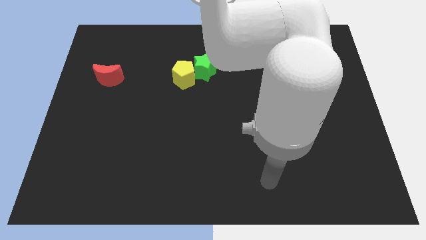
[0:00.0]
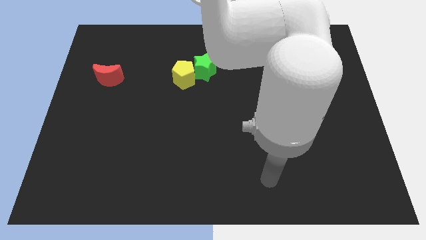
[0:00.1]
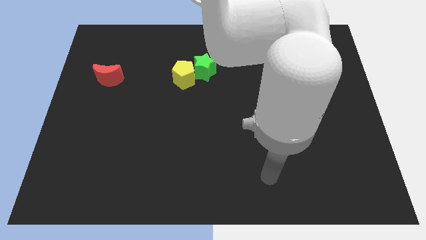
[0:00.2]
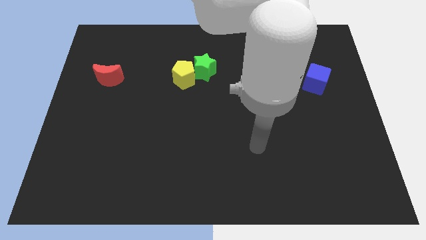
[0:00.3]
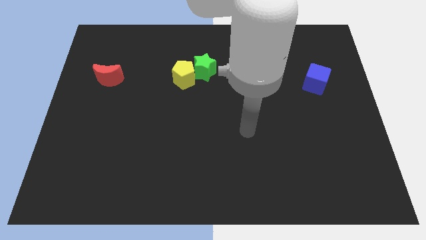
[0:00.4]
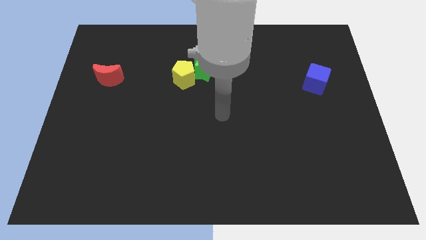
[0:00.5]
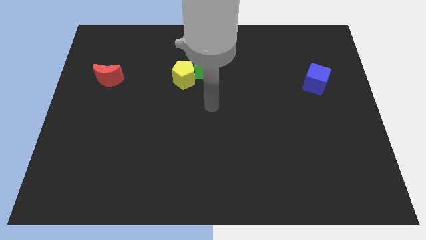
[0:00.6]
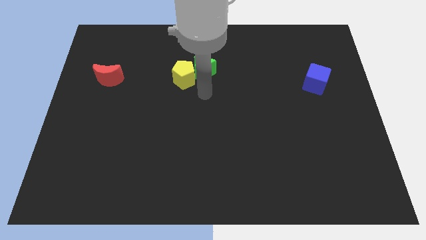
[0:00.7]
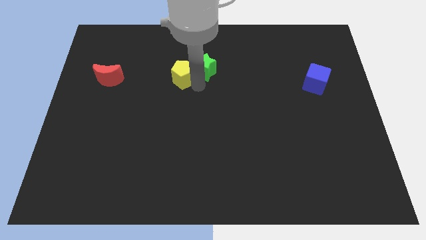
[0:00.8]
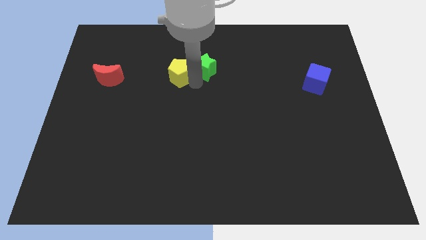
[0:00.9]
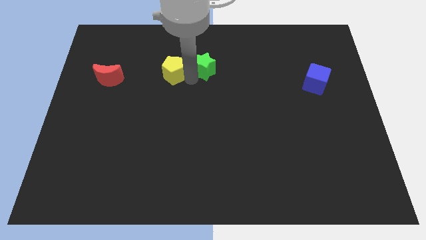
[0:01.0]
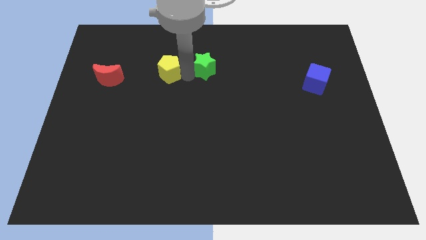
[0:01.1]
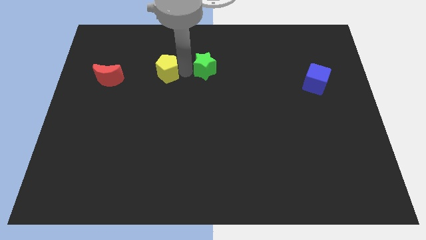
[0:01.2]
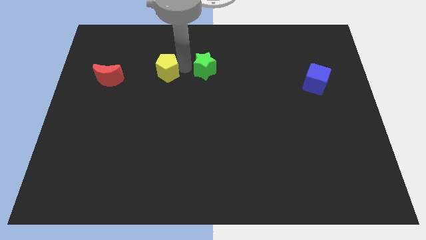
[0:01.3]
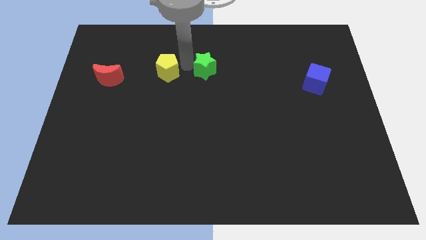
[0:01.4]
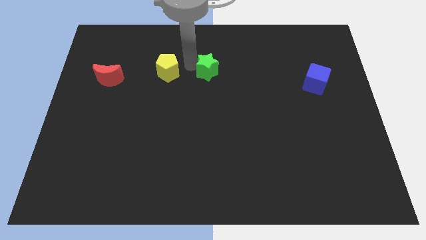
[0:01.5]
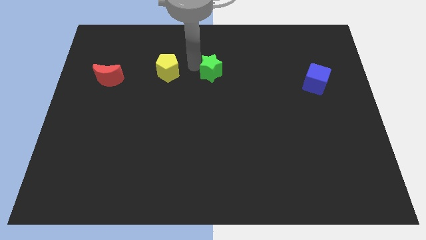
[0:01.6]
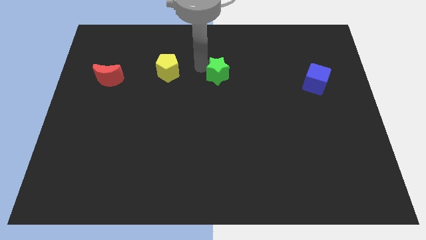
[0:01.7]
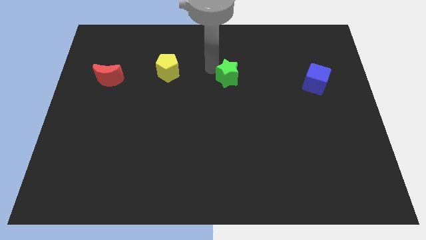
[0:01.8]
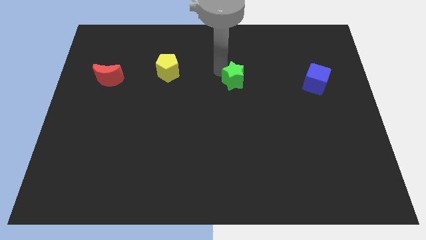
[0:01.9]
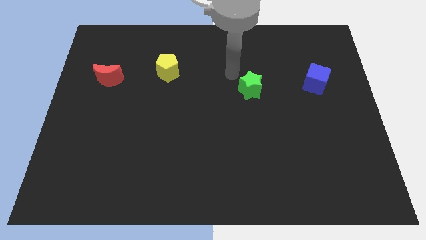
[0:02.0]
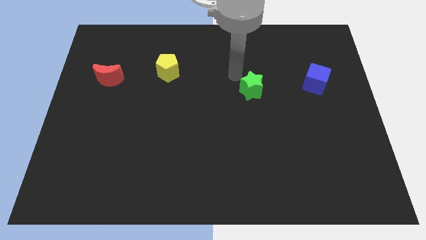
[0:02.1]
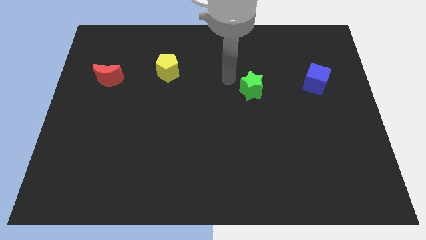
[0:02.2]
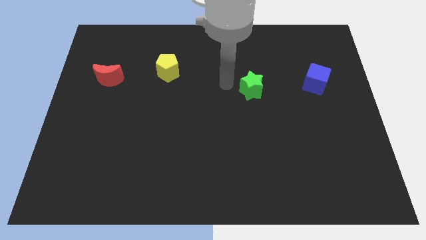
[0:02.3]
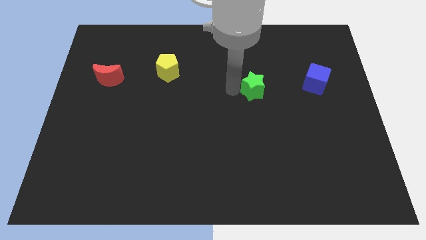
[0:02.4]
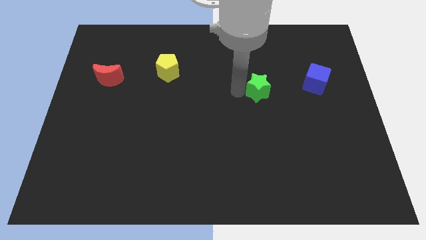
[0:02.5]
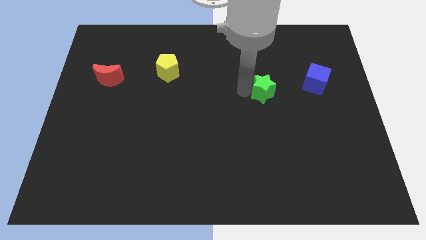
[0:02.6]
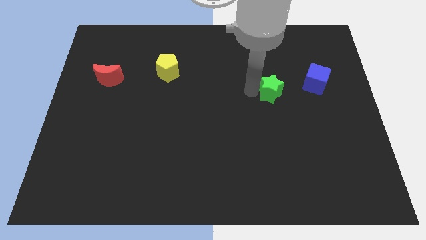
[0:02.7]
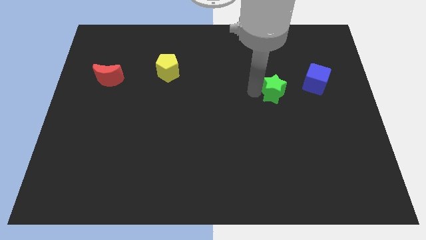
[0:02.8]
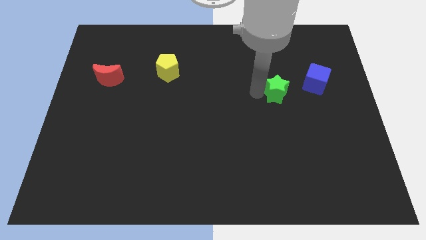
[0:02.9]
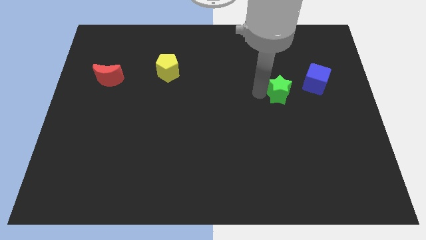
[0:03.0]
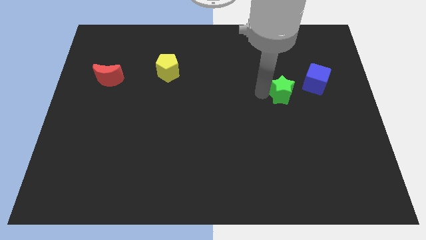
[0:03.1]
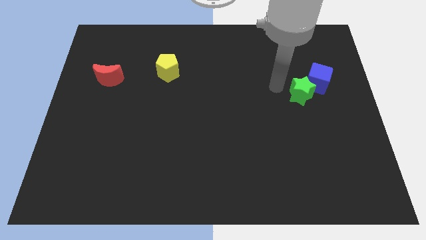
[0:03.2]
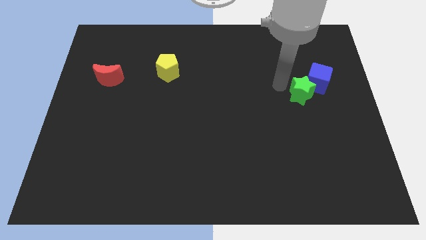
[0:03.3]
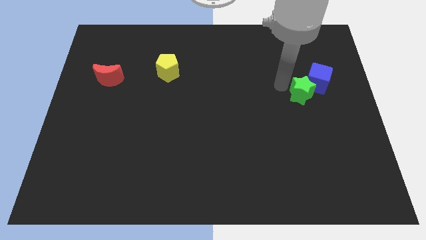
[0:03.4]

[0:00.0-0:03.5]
push the green block towards the cube

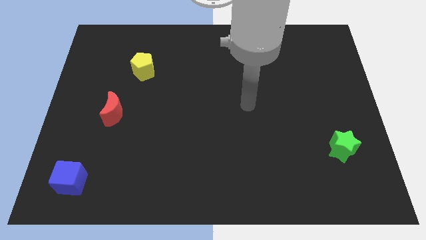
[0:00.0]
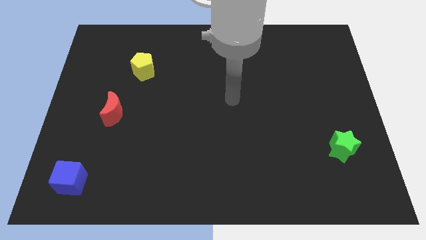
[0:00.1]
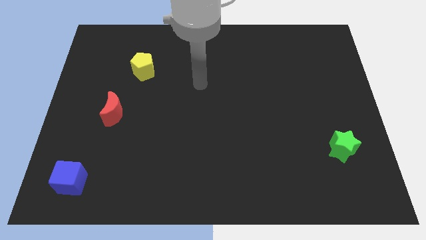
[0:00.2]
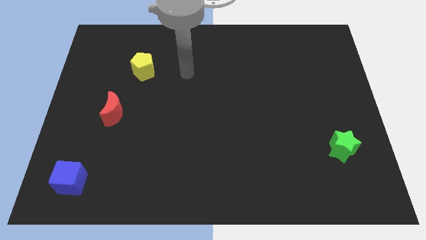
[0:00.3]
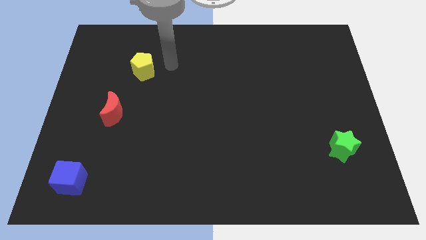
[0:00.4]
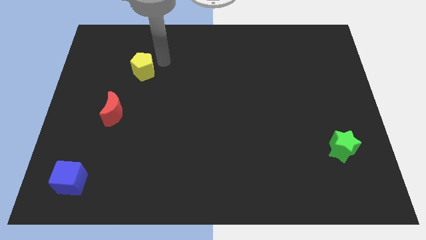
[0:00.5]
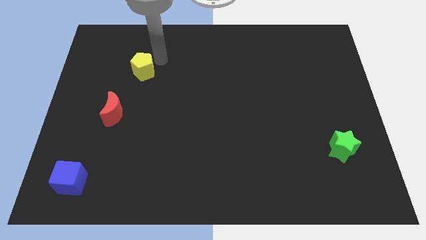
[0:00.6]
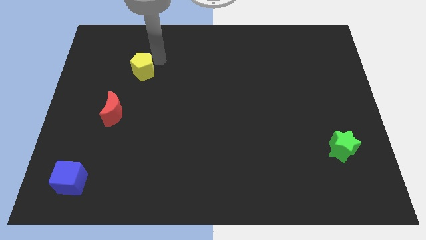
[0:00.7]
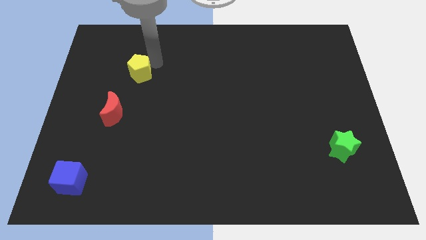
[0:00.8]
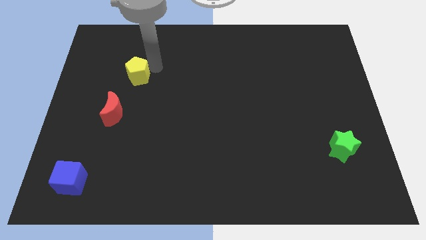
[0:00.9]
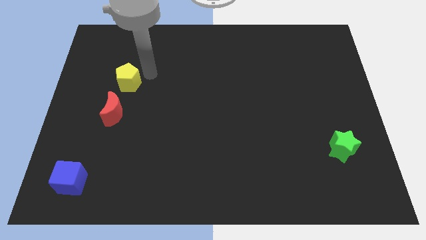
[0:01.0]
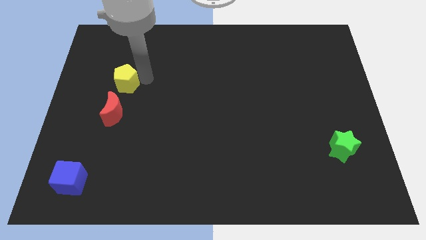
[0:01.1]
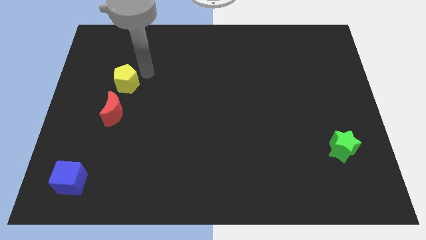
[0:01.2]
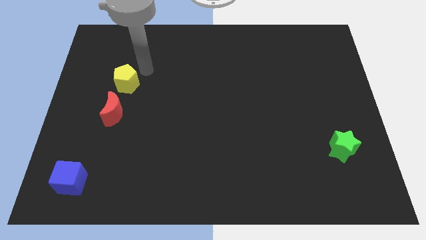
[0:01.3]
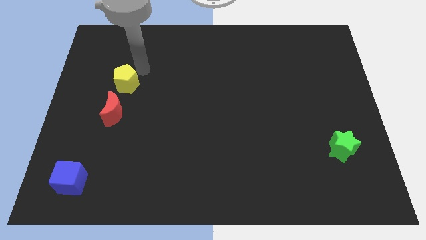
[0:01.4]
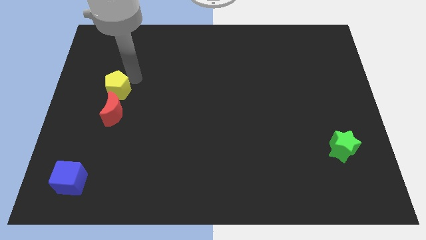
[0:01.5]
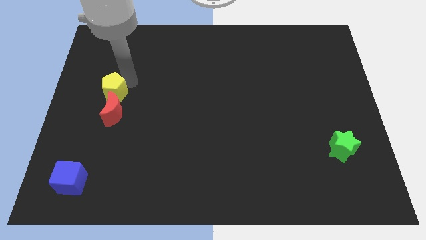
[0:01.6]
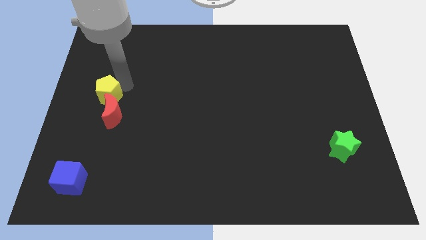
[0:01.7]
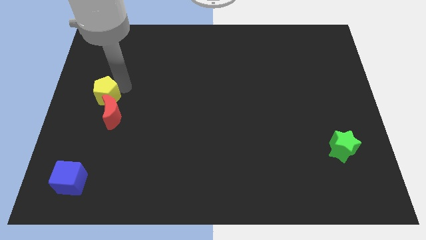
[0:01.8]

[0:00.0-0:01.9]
put the yellow block to the moon

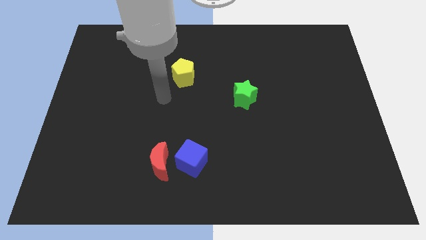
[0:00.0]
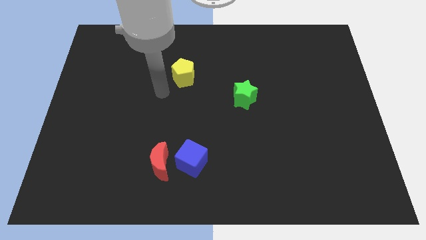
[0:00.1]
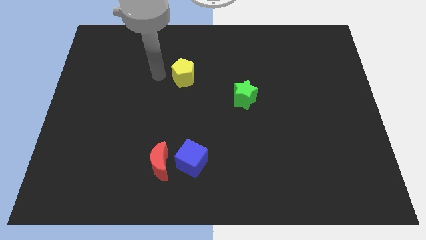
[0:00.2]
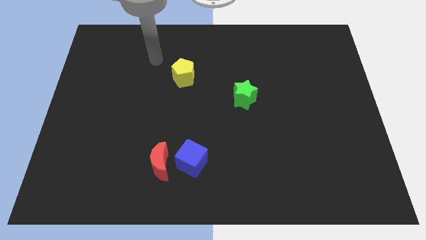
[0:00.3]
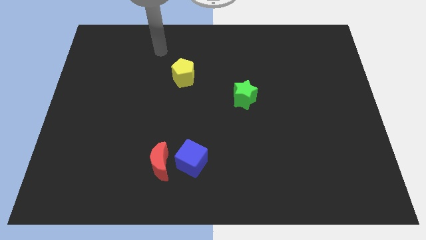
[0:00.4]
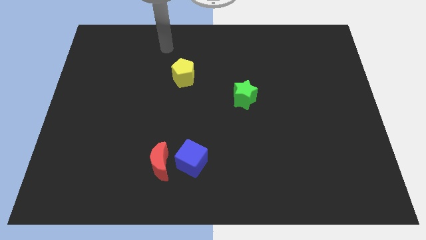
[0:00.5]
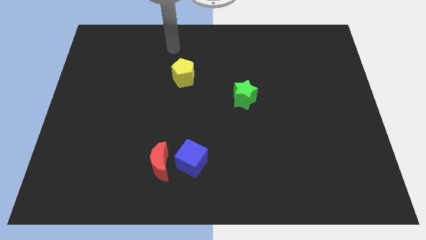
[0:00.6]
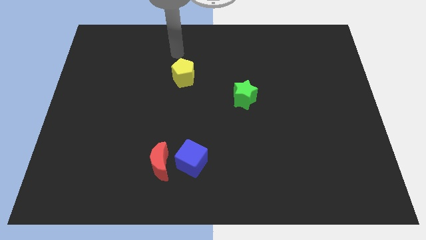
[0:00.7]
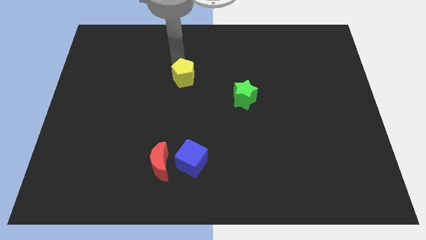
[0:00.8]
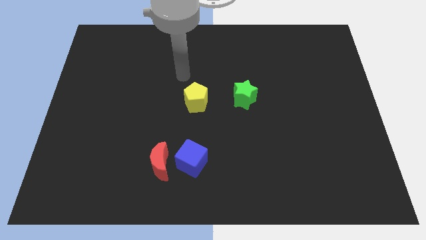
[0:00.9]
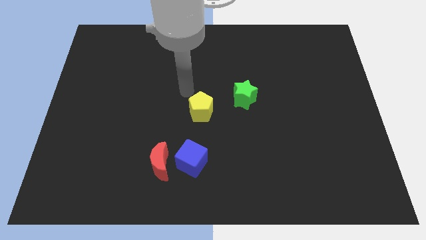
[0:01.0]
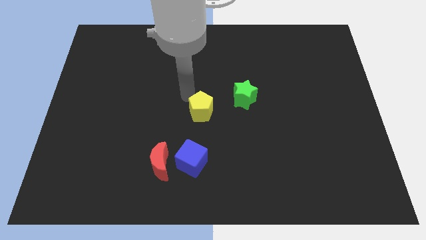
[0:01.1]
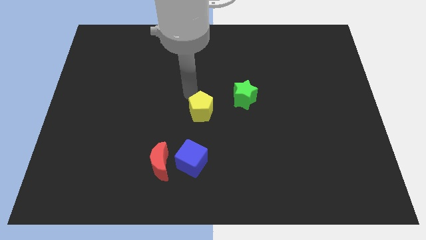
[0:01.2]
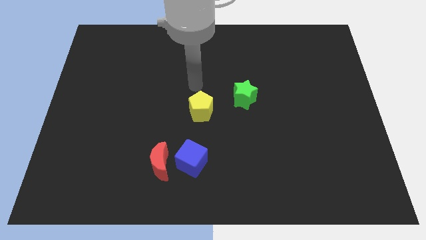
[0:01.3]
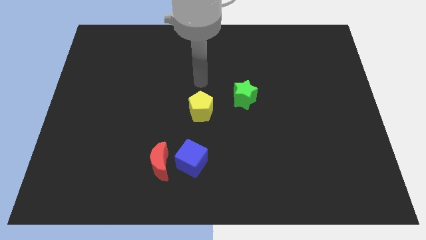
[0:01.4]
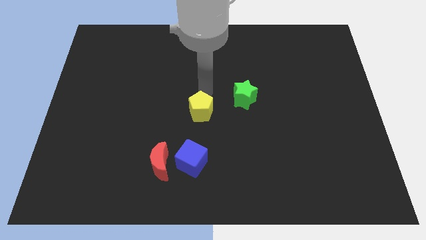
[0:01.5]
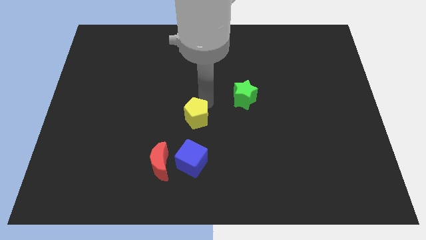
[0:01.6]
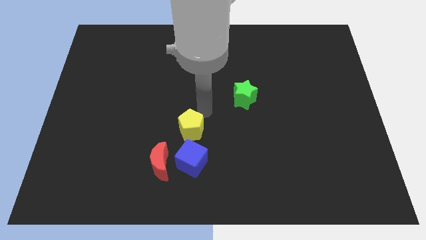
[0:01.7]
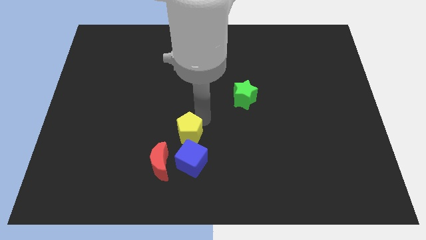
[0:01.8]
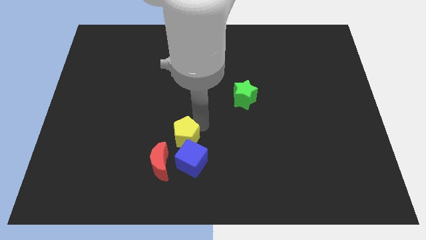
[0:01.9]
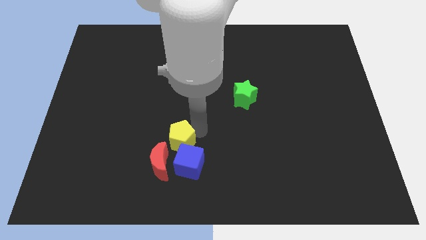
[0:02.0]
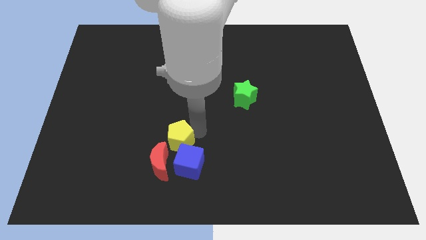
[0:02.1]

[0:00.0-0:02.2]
put the yellow block close to the blue block

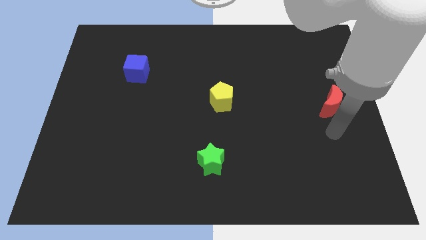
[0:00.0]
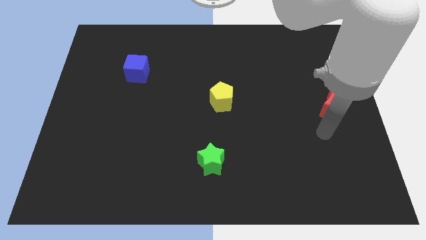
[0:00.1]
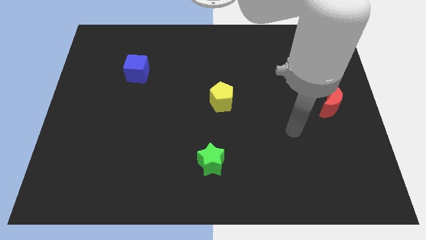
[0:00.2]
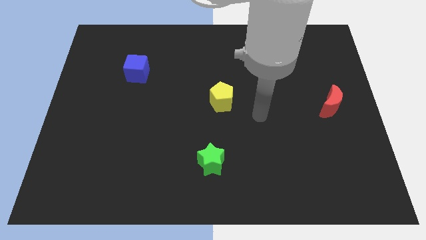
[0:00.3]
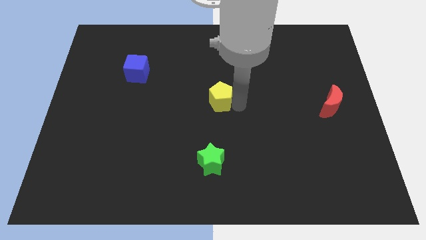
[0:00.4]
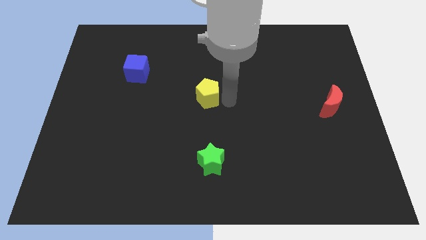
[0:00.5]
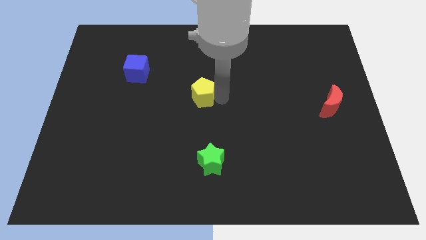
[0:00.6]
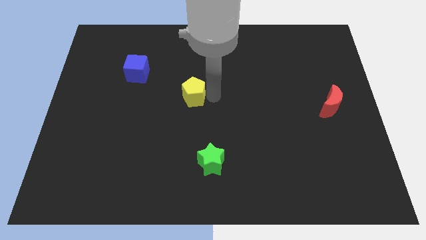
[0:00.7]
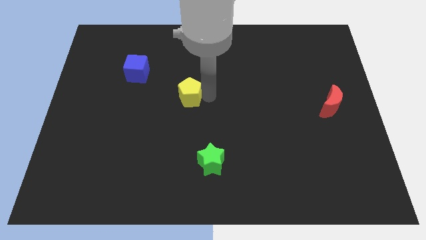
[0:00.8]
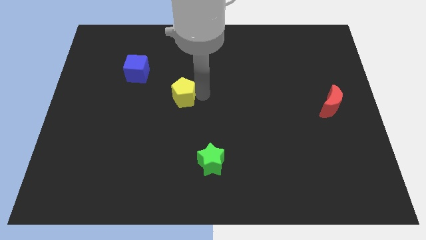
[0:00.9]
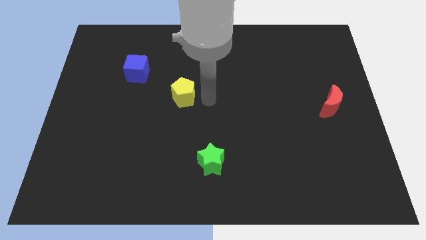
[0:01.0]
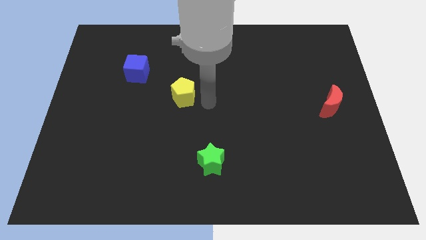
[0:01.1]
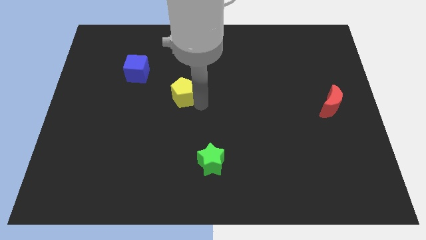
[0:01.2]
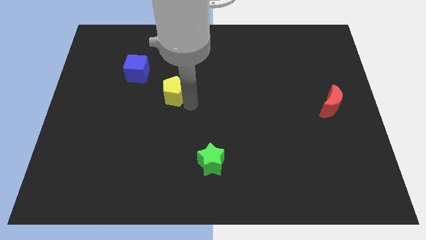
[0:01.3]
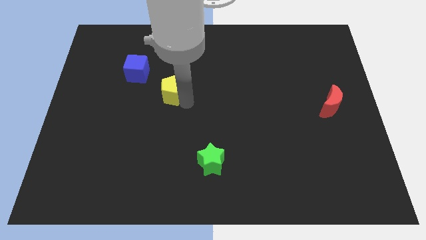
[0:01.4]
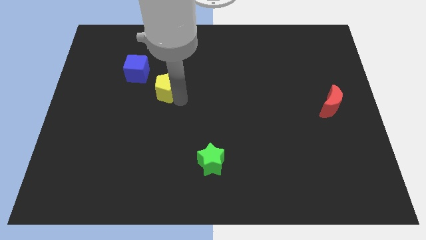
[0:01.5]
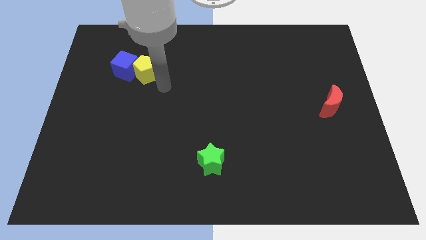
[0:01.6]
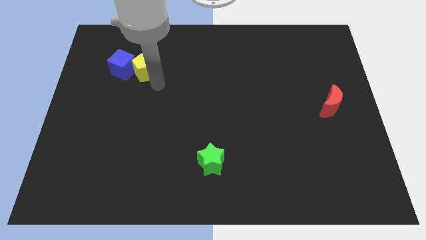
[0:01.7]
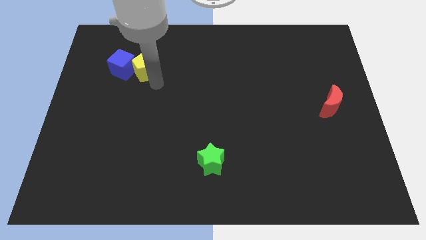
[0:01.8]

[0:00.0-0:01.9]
slide the yellow block close to the blue cube
